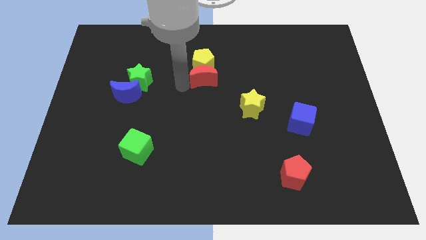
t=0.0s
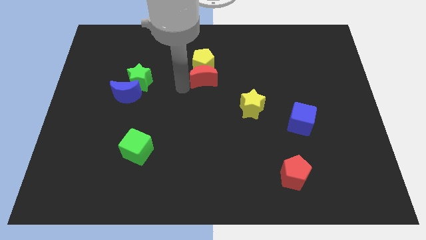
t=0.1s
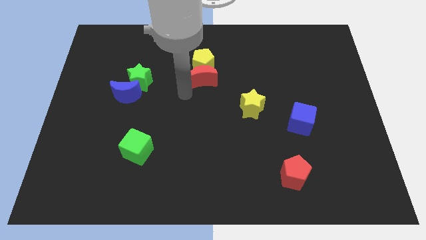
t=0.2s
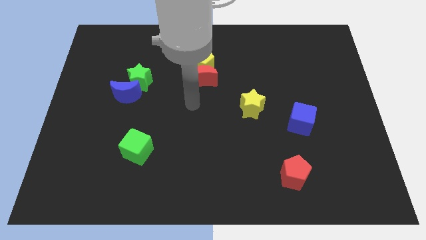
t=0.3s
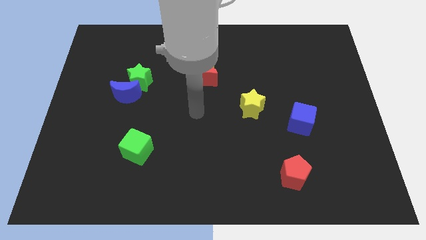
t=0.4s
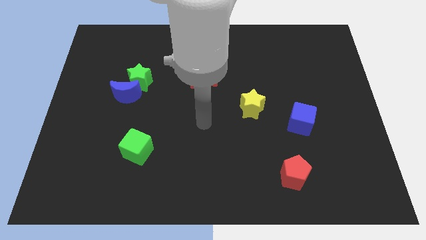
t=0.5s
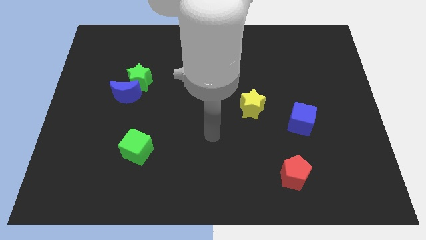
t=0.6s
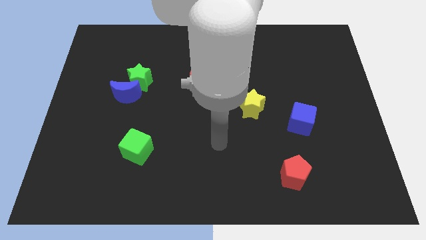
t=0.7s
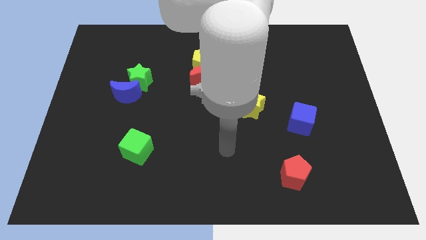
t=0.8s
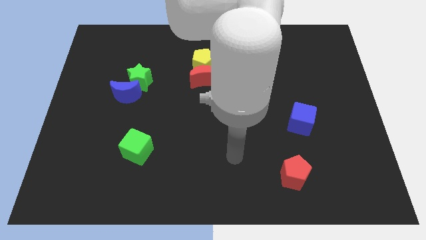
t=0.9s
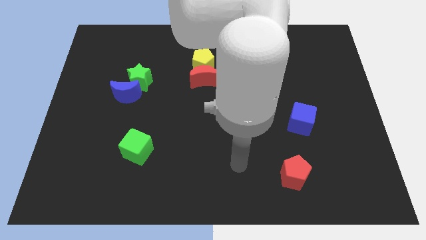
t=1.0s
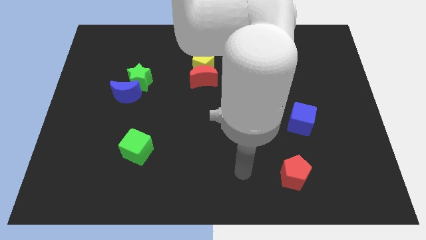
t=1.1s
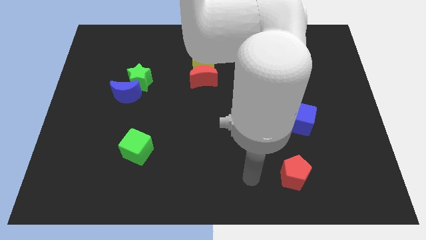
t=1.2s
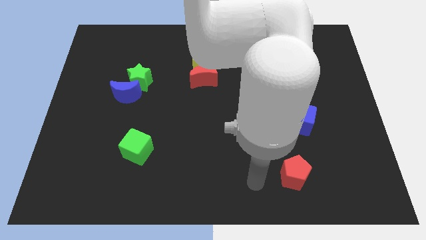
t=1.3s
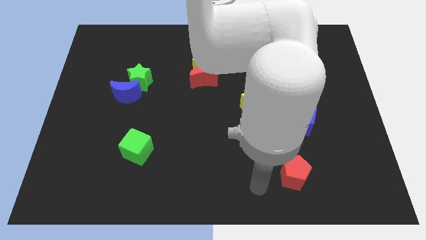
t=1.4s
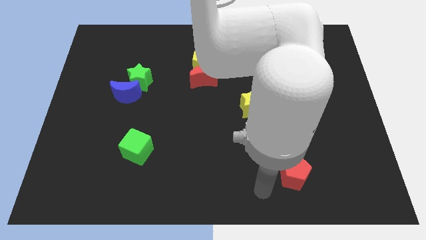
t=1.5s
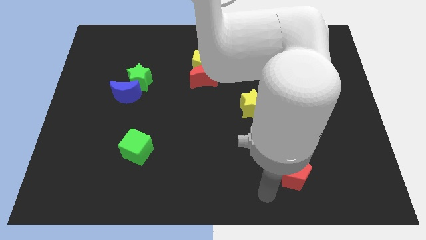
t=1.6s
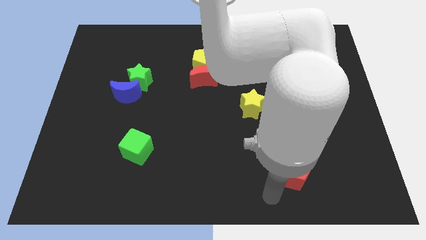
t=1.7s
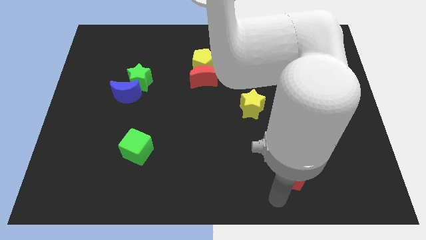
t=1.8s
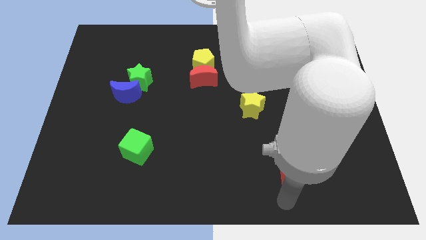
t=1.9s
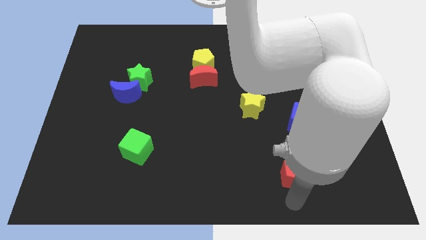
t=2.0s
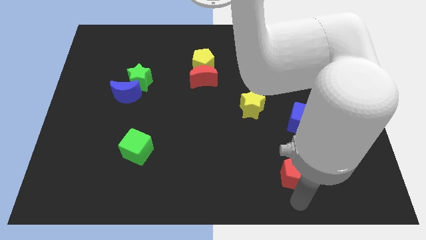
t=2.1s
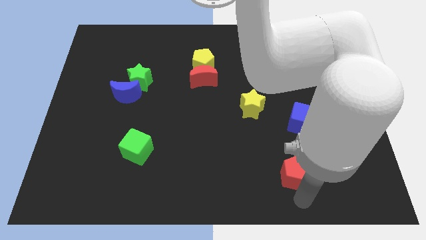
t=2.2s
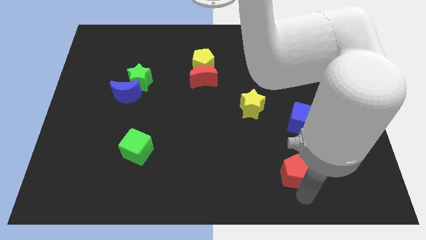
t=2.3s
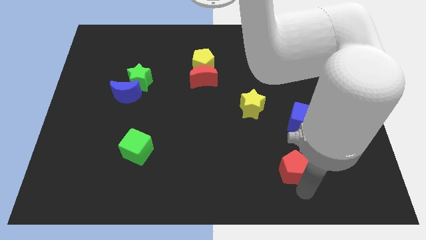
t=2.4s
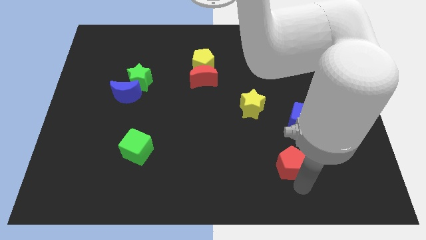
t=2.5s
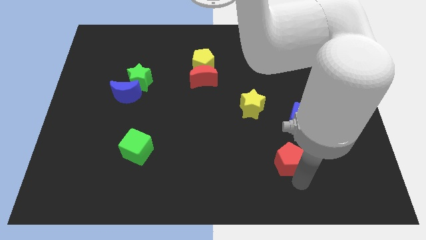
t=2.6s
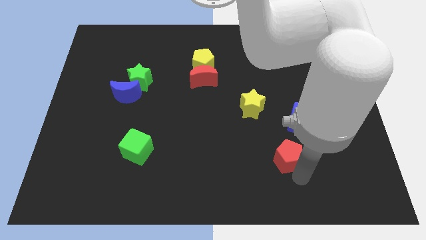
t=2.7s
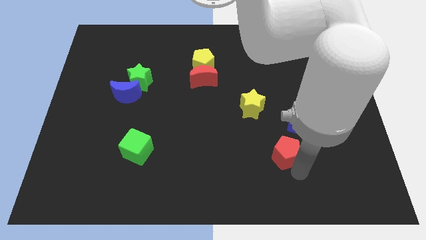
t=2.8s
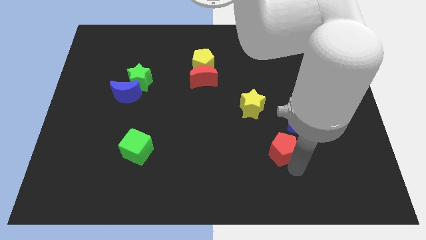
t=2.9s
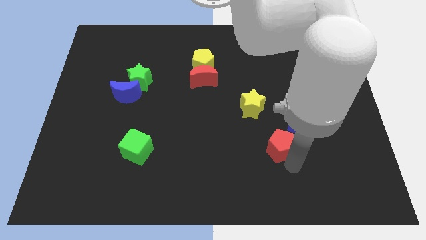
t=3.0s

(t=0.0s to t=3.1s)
drag red pentagon towards blue cube

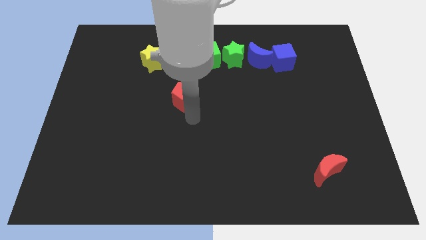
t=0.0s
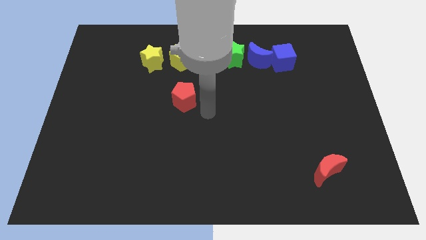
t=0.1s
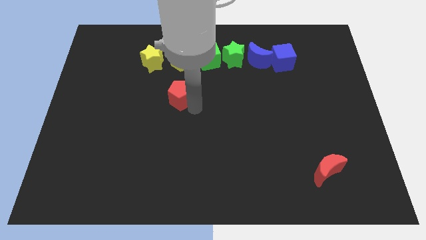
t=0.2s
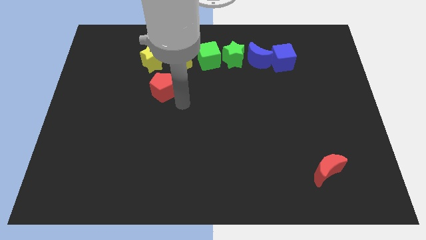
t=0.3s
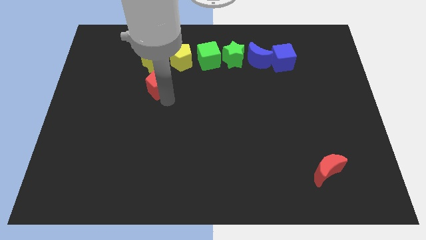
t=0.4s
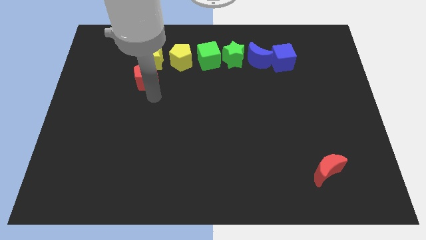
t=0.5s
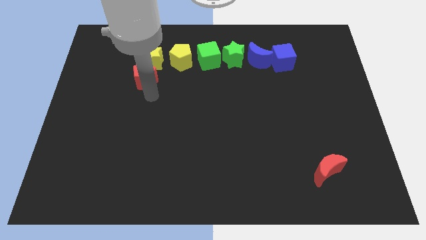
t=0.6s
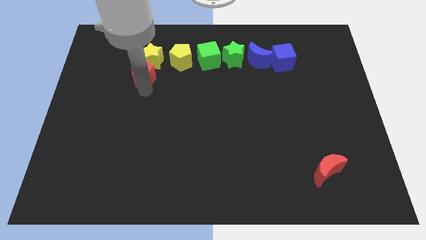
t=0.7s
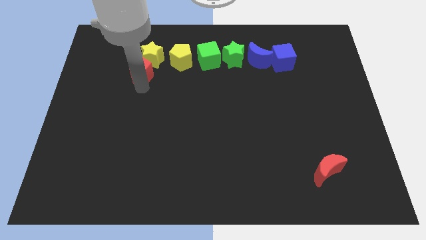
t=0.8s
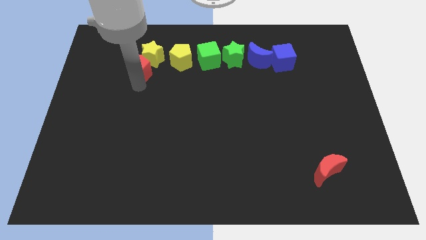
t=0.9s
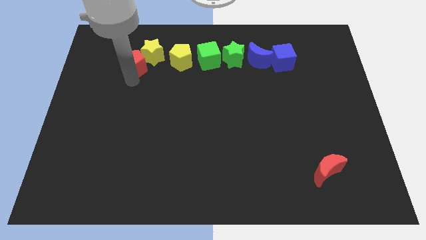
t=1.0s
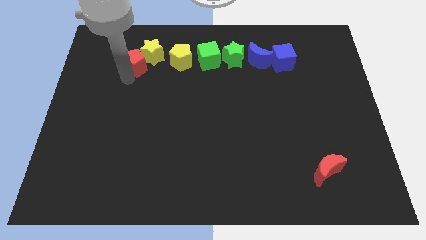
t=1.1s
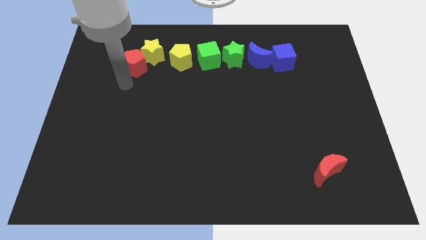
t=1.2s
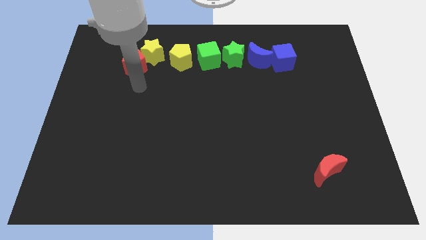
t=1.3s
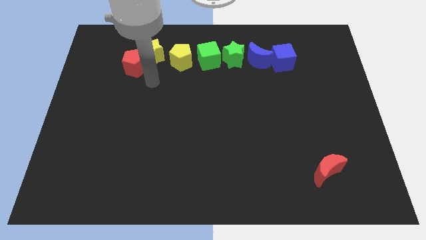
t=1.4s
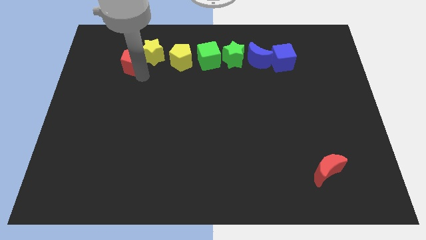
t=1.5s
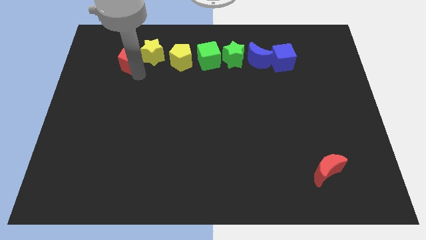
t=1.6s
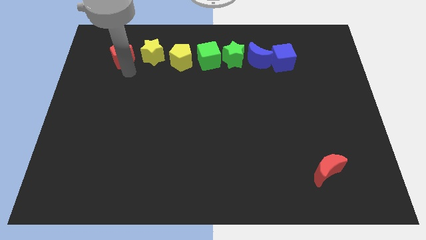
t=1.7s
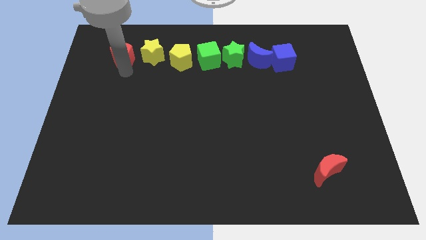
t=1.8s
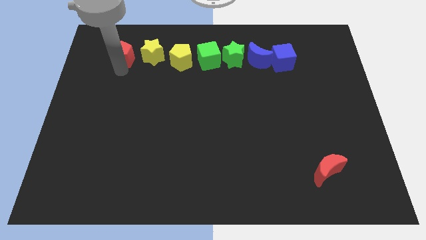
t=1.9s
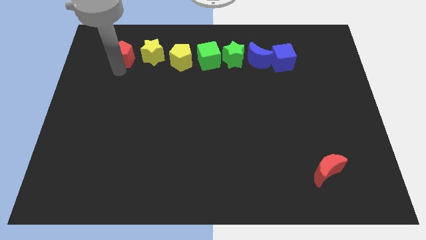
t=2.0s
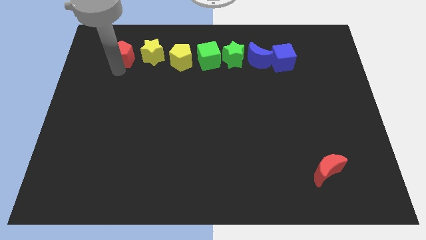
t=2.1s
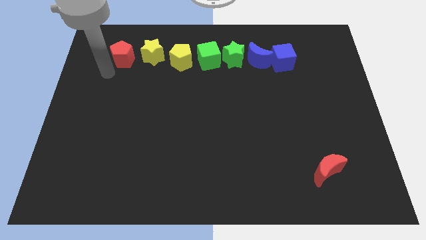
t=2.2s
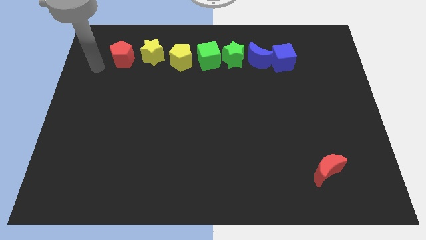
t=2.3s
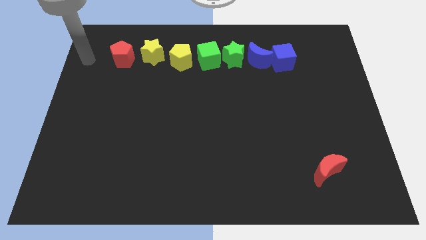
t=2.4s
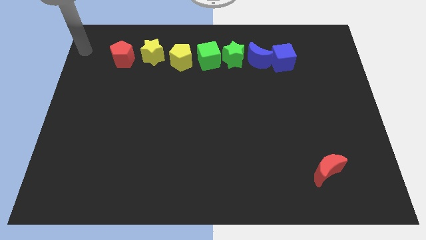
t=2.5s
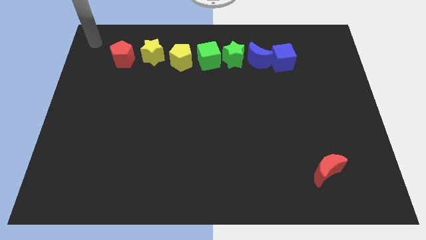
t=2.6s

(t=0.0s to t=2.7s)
push the red pentagon to the left of the yellow star

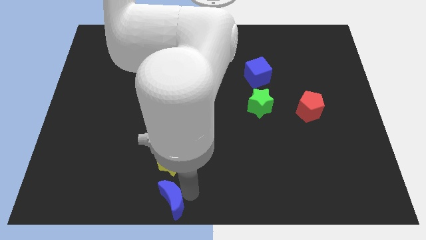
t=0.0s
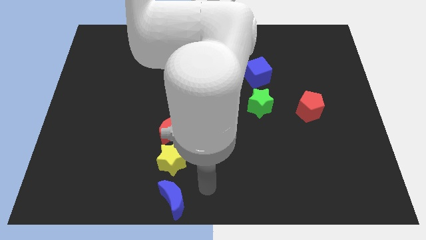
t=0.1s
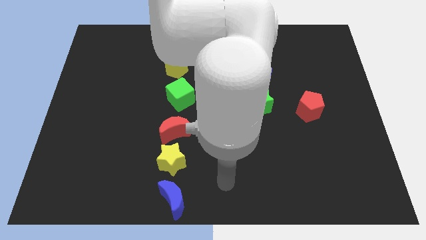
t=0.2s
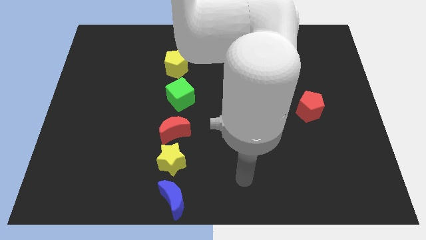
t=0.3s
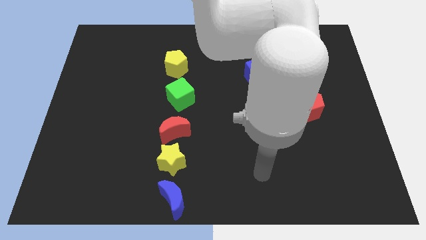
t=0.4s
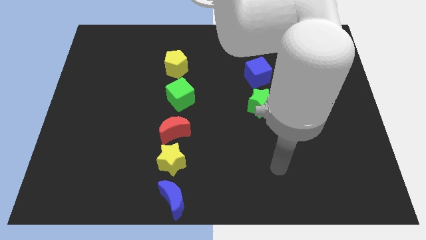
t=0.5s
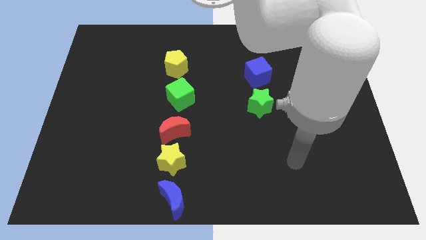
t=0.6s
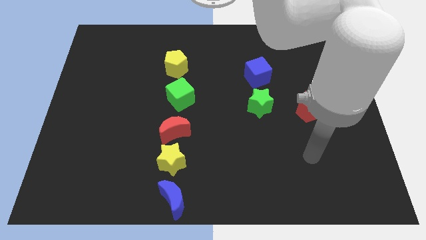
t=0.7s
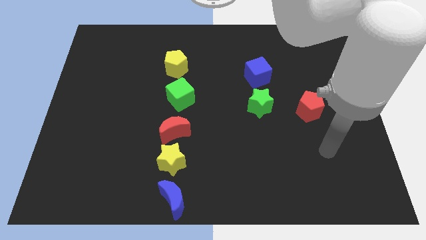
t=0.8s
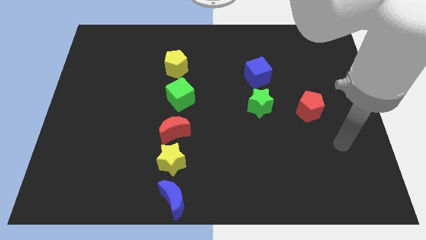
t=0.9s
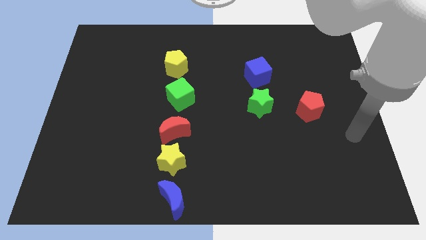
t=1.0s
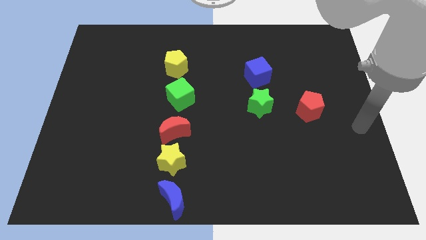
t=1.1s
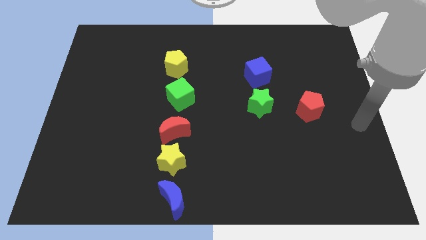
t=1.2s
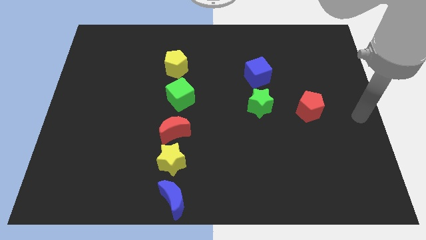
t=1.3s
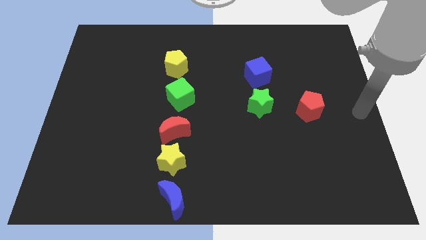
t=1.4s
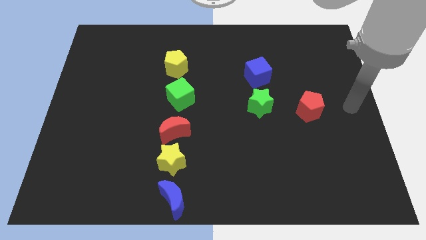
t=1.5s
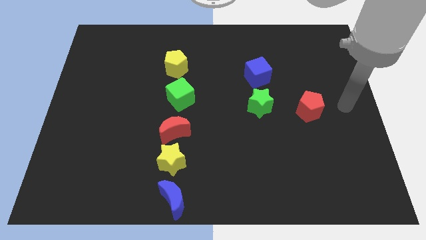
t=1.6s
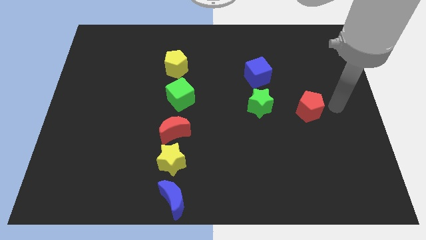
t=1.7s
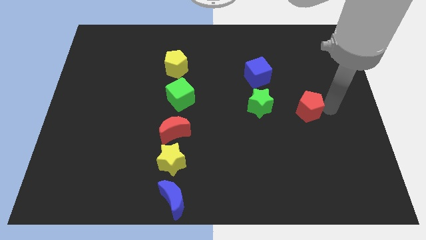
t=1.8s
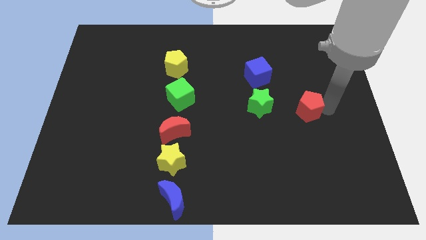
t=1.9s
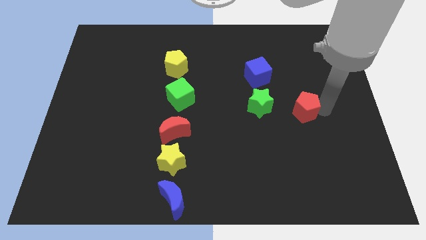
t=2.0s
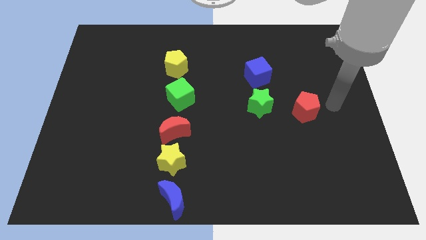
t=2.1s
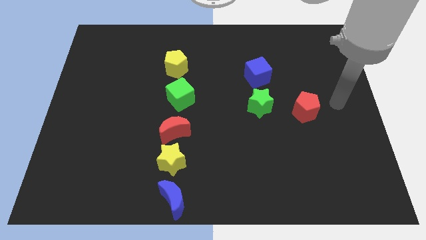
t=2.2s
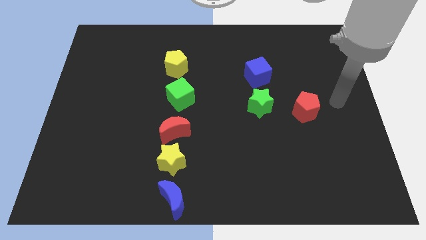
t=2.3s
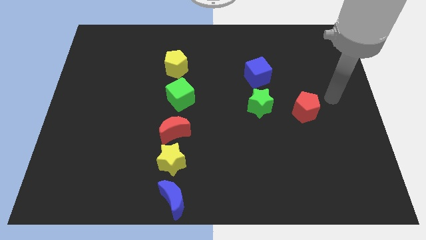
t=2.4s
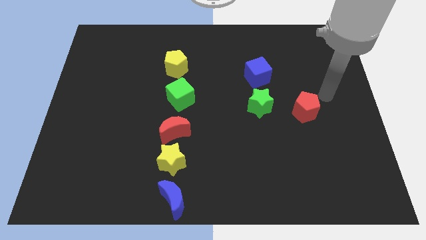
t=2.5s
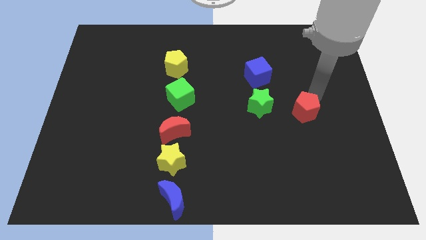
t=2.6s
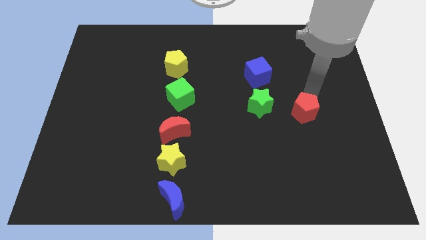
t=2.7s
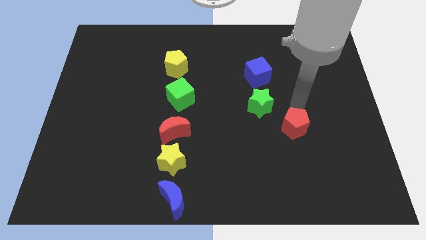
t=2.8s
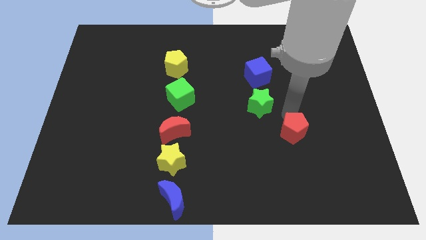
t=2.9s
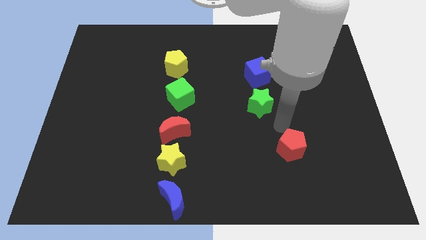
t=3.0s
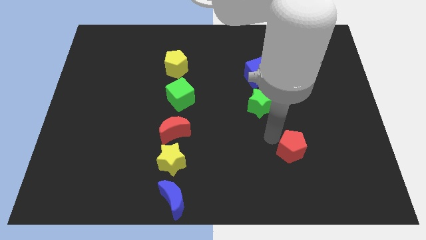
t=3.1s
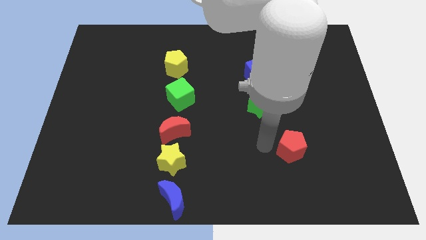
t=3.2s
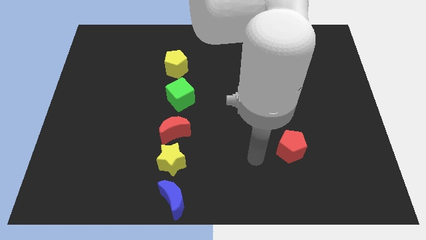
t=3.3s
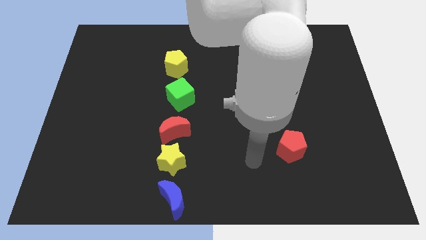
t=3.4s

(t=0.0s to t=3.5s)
push the red pentagon towards the bottom side of the board
